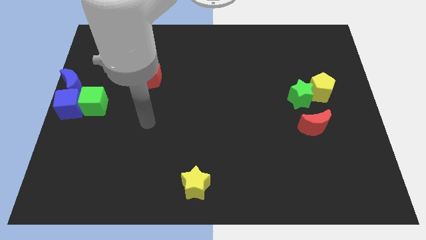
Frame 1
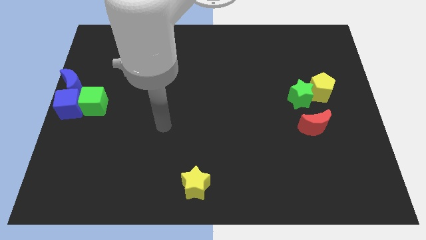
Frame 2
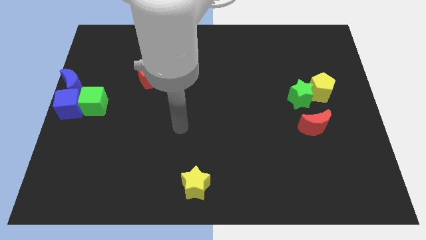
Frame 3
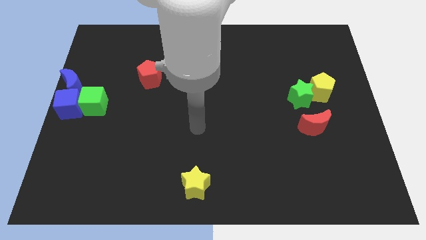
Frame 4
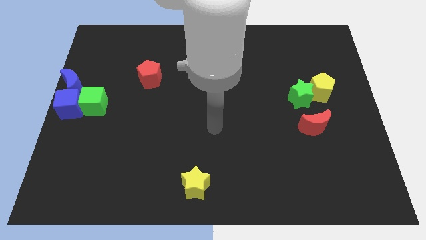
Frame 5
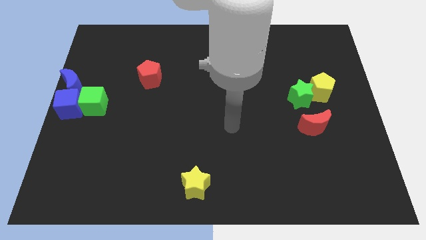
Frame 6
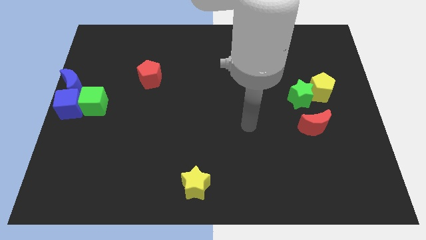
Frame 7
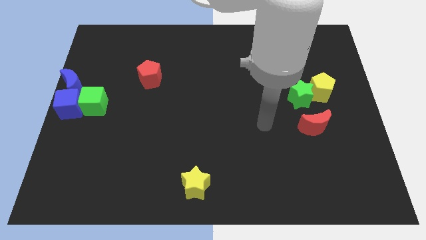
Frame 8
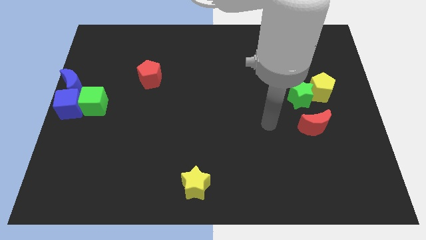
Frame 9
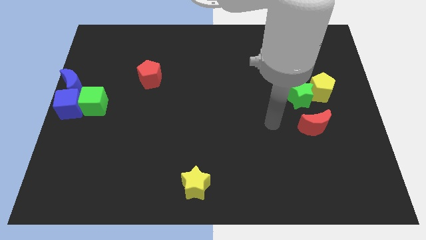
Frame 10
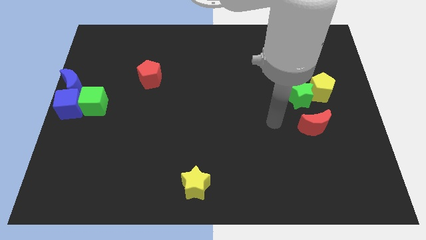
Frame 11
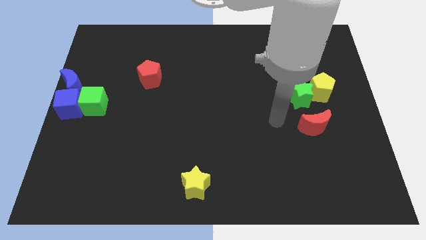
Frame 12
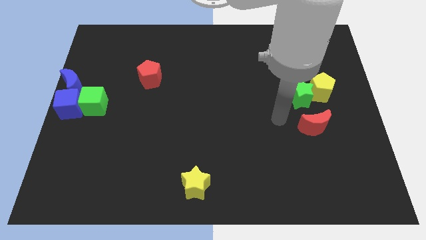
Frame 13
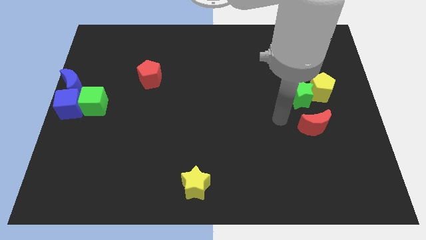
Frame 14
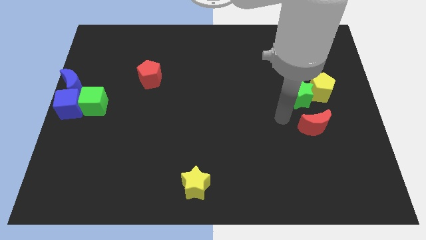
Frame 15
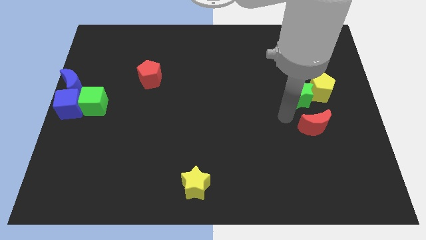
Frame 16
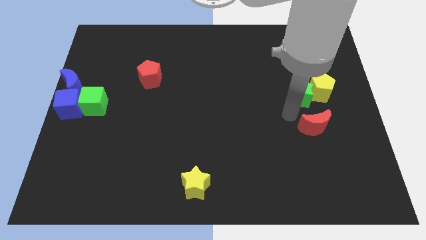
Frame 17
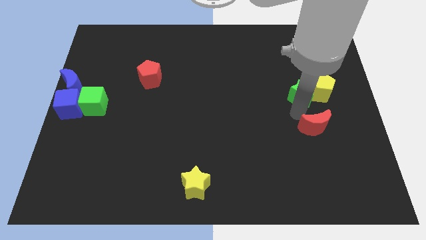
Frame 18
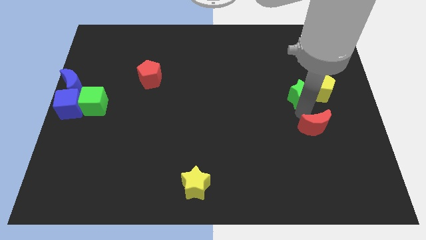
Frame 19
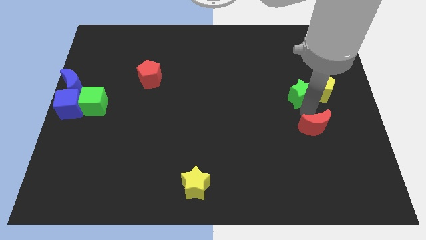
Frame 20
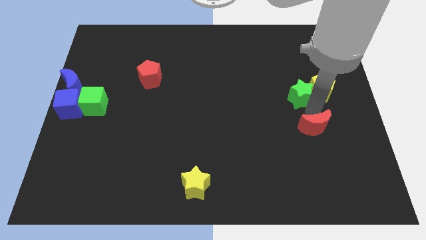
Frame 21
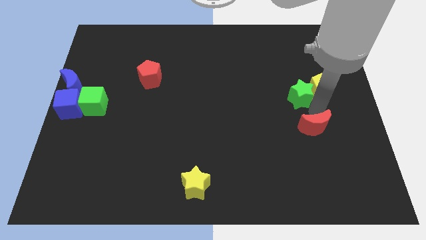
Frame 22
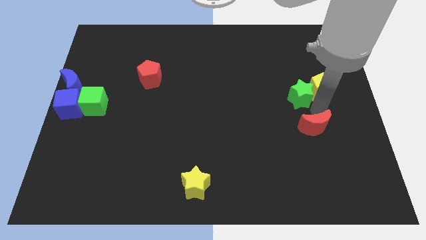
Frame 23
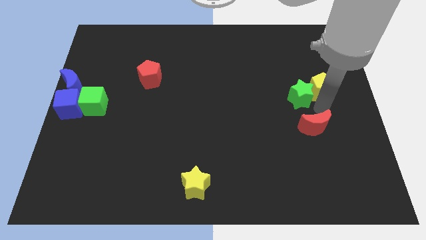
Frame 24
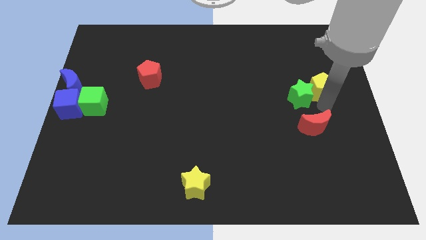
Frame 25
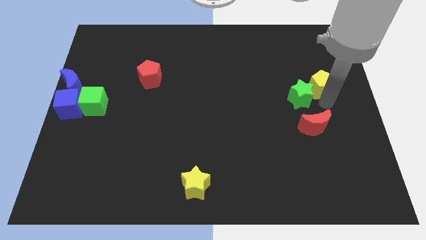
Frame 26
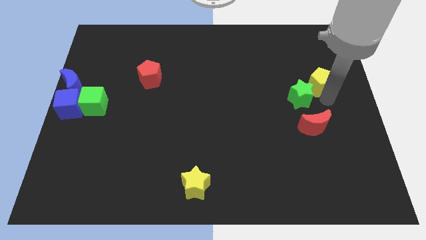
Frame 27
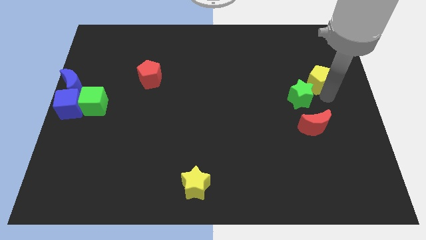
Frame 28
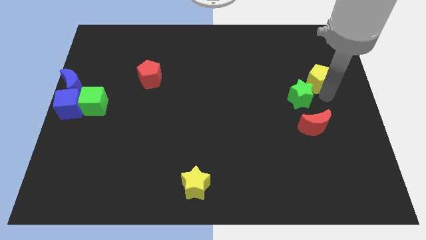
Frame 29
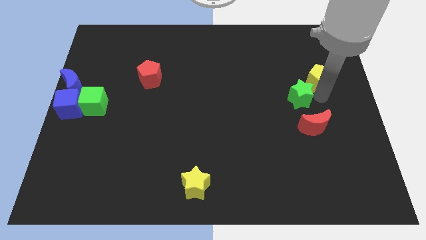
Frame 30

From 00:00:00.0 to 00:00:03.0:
slightly move the yellow pentagon upside

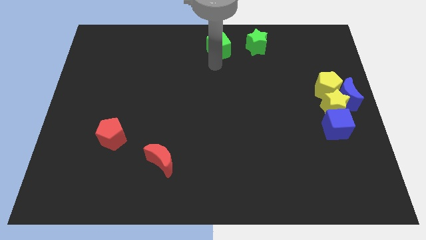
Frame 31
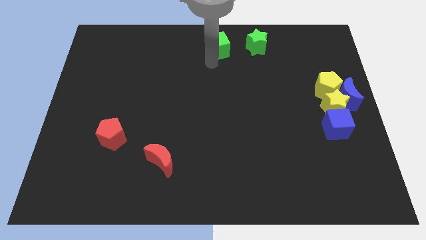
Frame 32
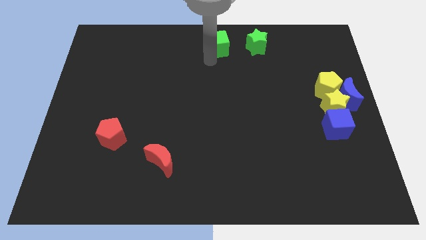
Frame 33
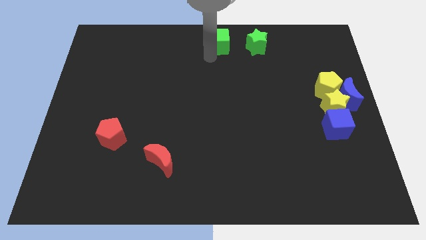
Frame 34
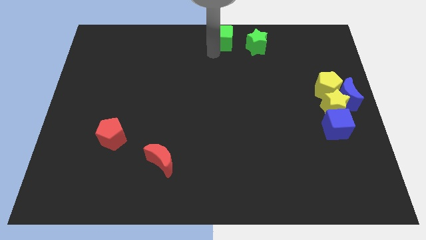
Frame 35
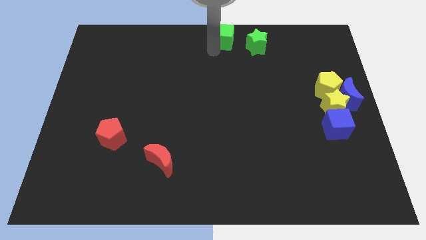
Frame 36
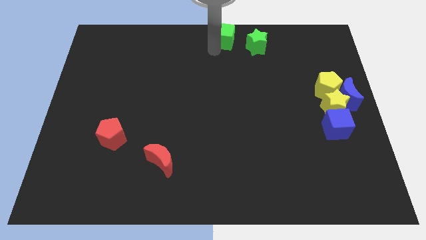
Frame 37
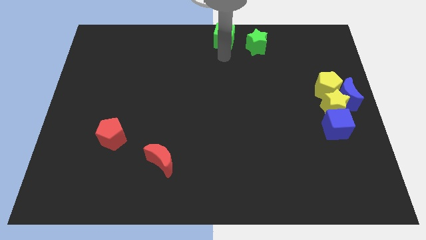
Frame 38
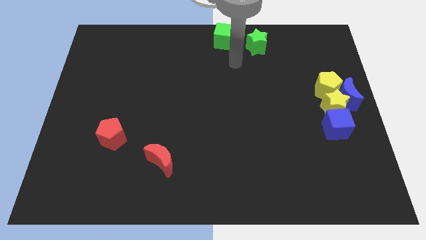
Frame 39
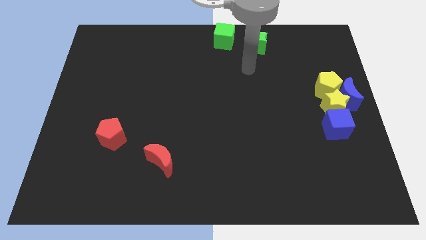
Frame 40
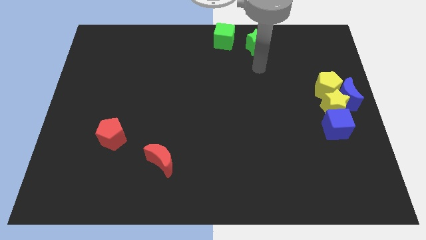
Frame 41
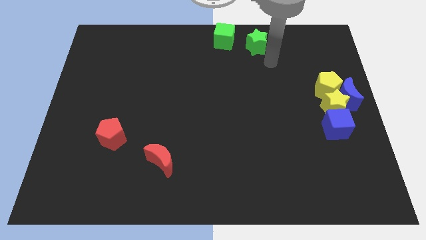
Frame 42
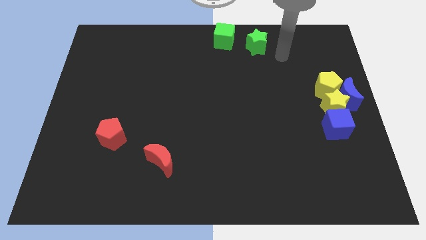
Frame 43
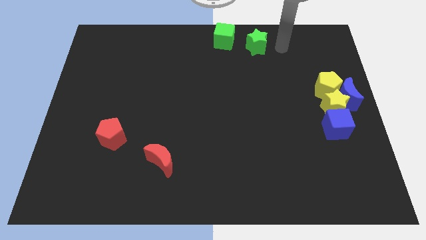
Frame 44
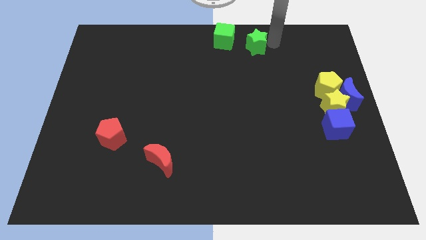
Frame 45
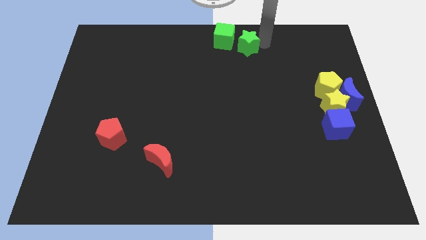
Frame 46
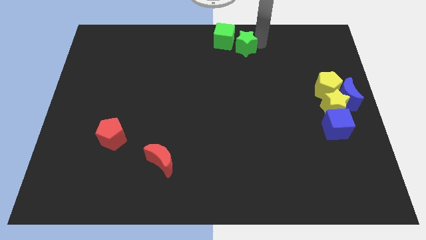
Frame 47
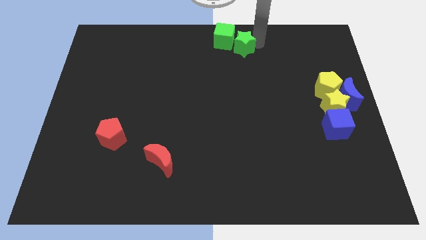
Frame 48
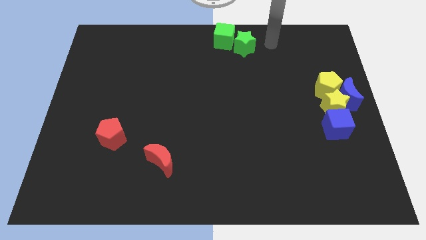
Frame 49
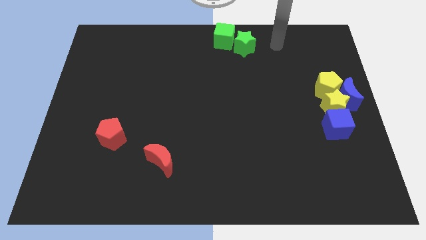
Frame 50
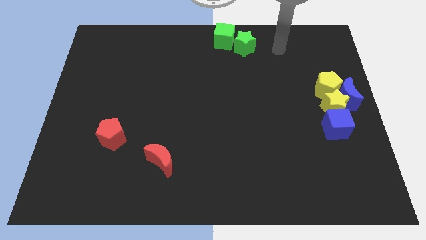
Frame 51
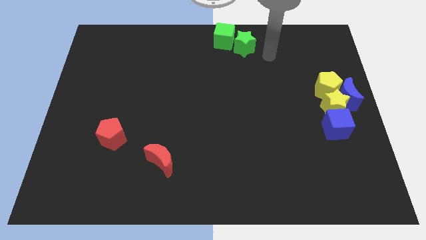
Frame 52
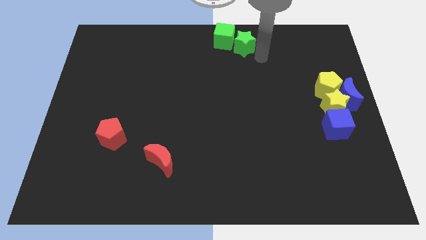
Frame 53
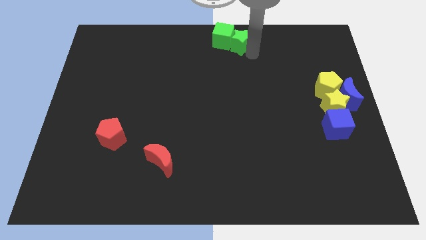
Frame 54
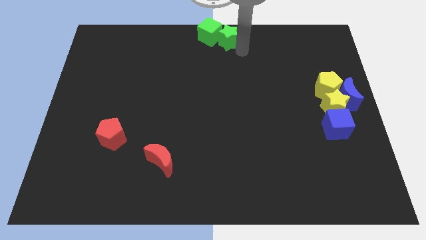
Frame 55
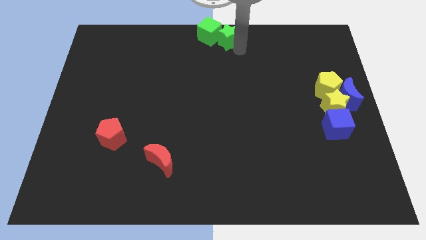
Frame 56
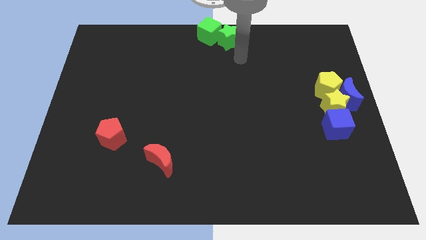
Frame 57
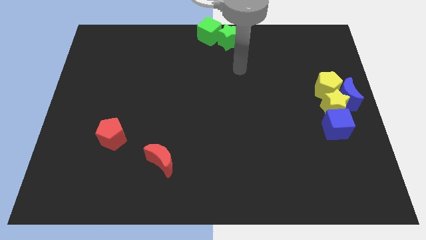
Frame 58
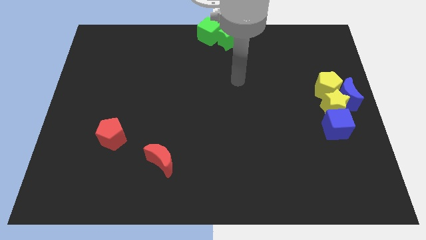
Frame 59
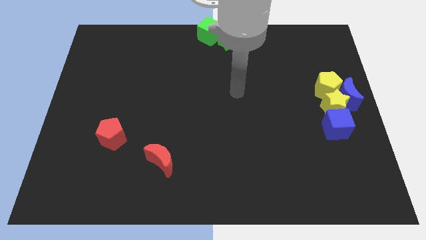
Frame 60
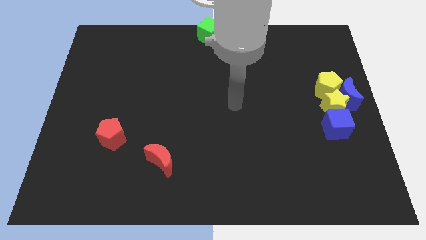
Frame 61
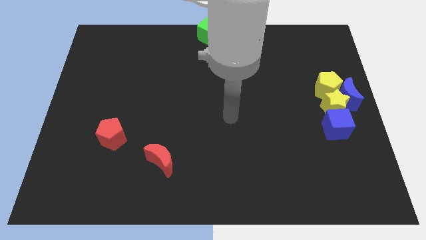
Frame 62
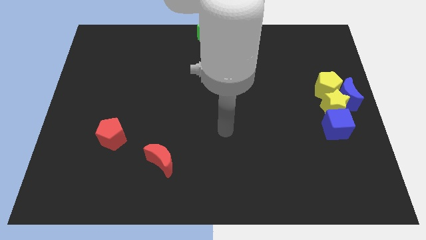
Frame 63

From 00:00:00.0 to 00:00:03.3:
put the green blocks together at the top center of the board

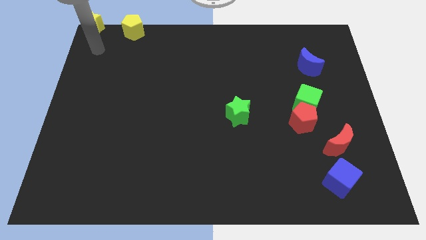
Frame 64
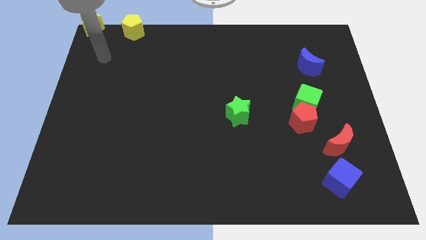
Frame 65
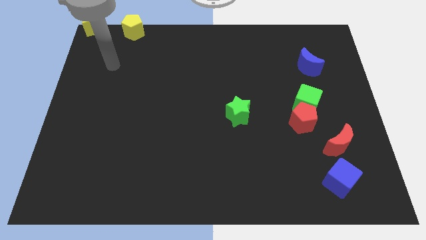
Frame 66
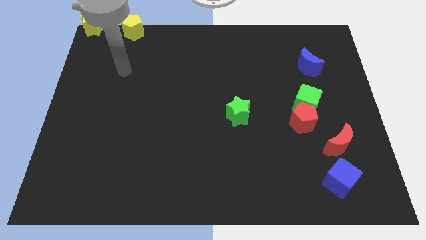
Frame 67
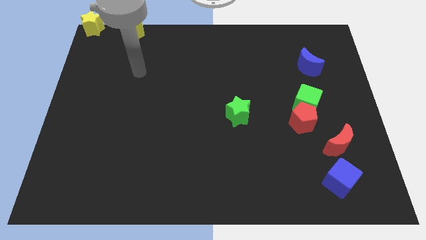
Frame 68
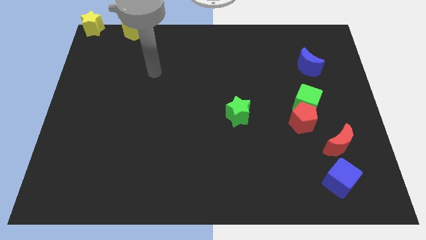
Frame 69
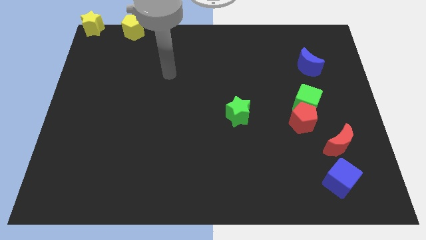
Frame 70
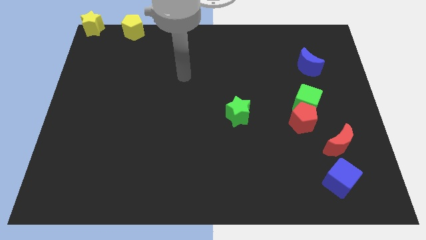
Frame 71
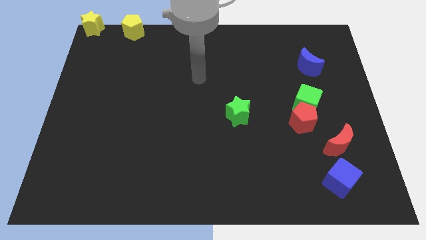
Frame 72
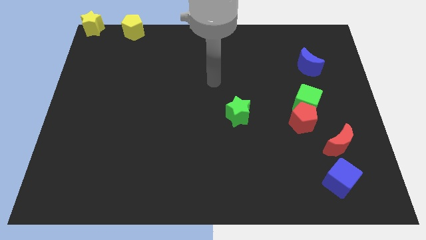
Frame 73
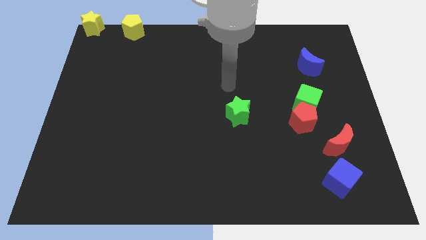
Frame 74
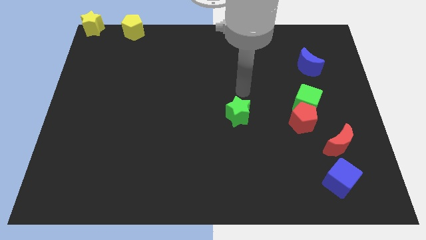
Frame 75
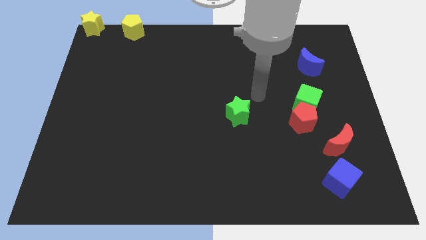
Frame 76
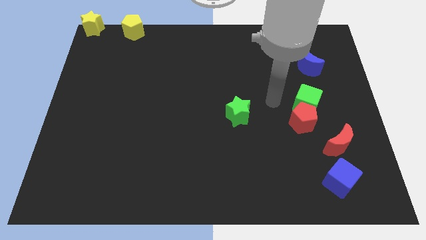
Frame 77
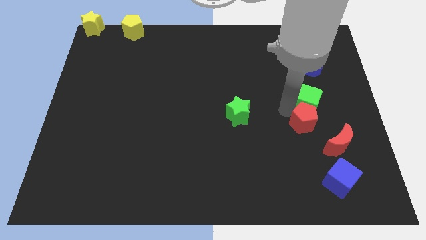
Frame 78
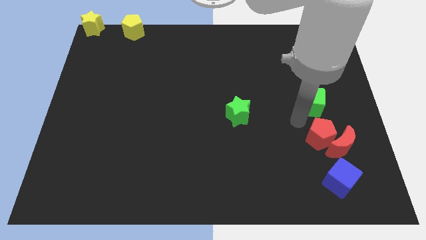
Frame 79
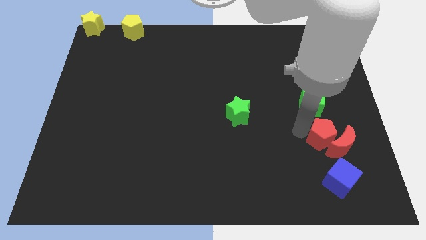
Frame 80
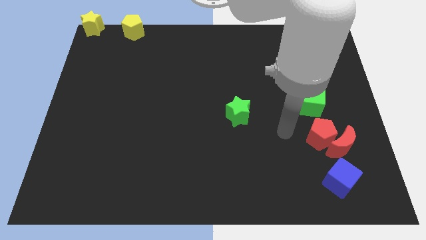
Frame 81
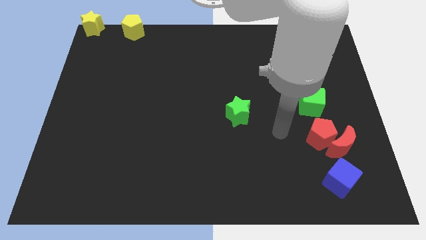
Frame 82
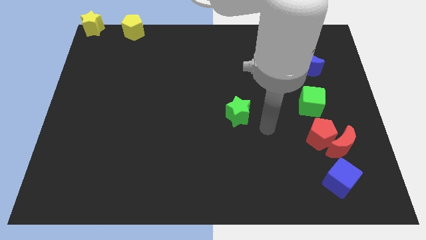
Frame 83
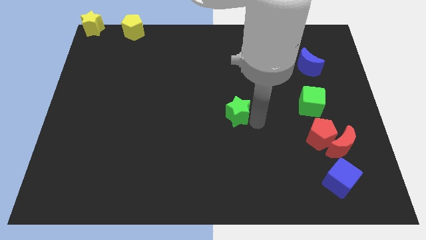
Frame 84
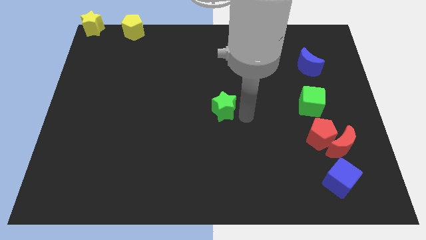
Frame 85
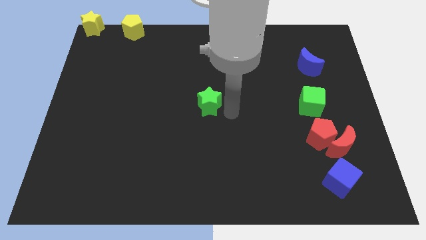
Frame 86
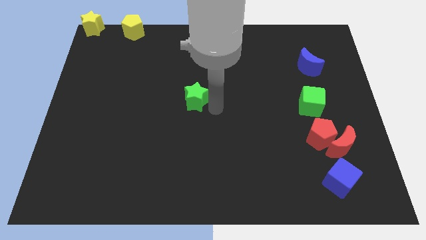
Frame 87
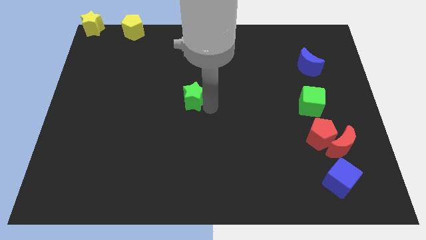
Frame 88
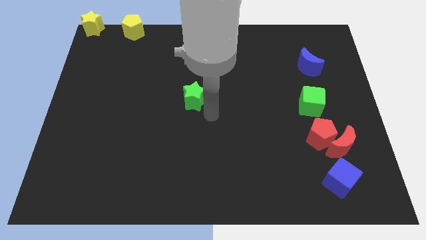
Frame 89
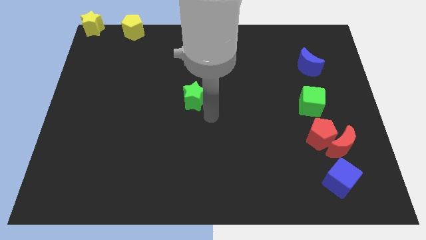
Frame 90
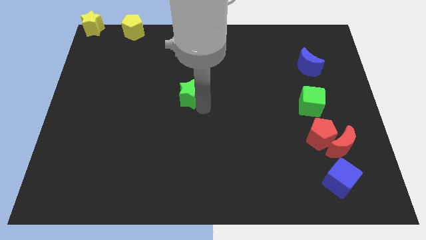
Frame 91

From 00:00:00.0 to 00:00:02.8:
slide the green star to the center of the board

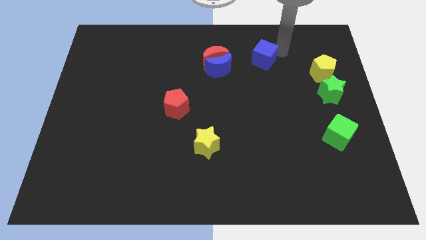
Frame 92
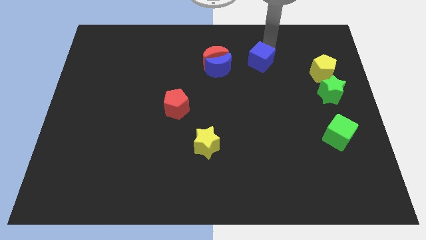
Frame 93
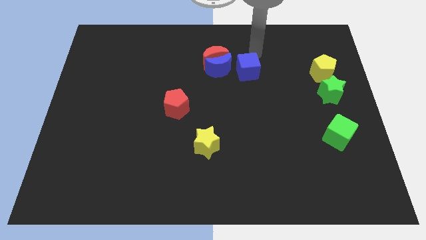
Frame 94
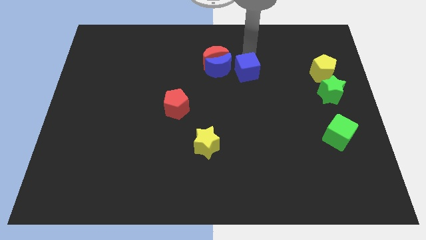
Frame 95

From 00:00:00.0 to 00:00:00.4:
push the blue cube right to the blue moon
